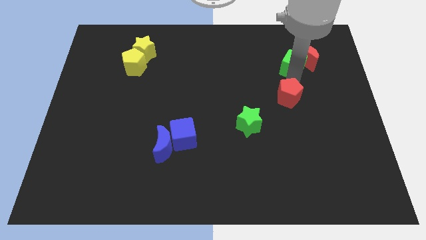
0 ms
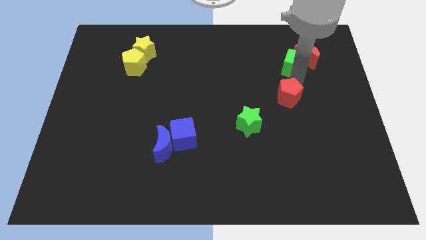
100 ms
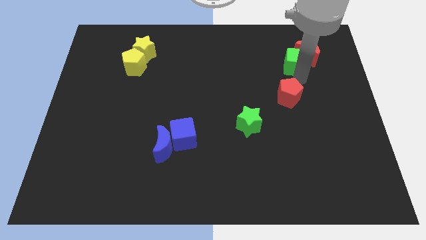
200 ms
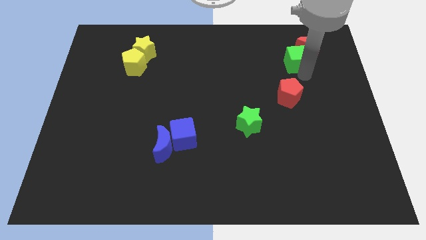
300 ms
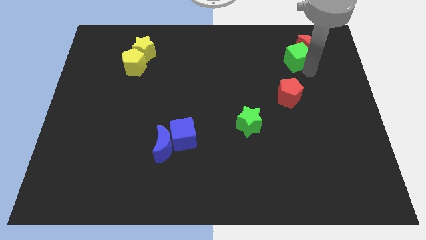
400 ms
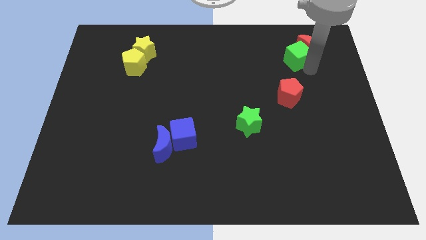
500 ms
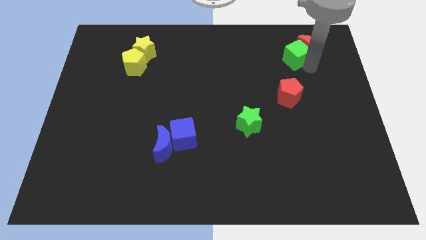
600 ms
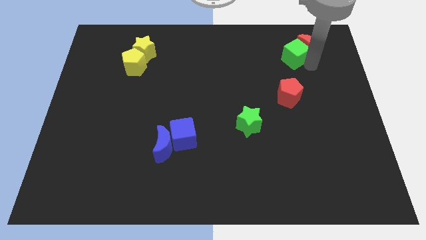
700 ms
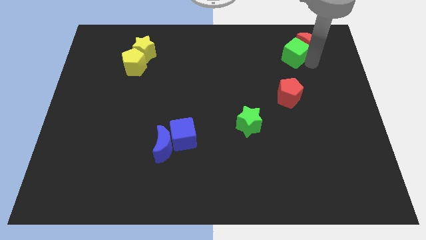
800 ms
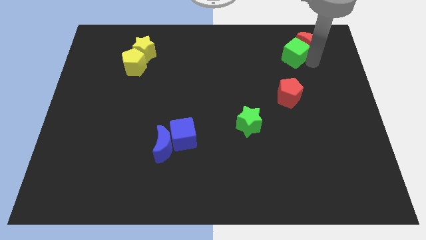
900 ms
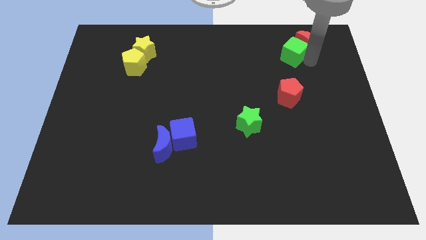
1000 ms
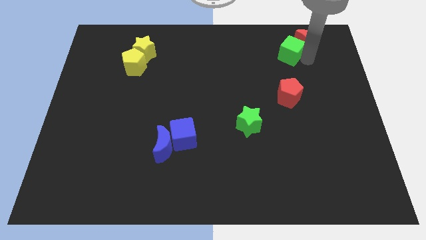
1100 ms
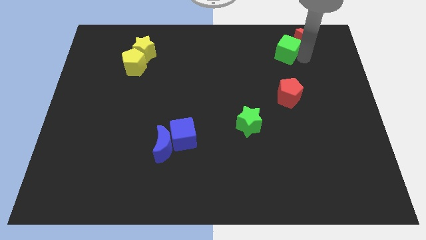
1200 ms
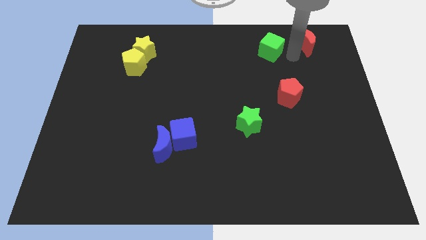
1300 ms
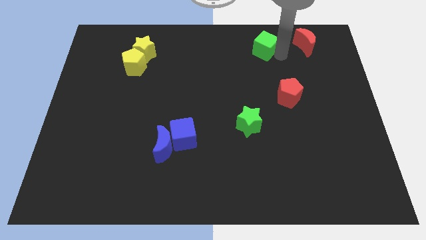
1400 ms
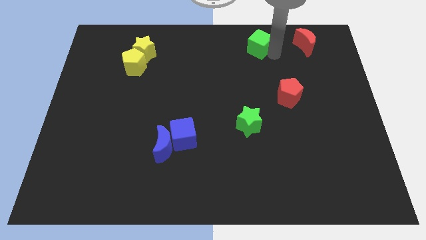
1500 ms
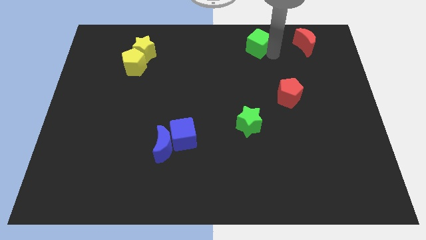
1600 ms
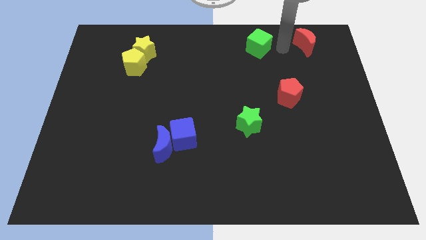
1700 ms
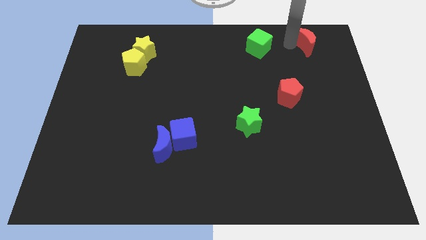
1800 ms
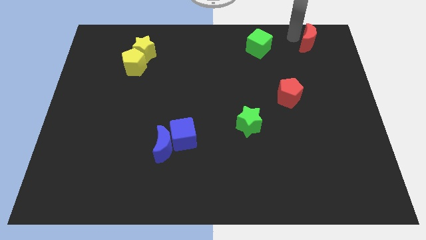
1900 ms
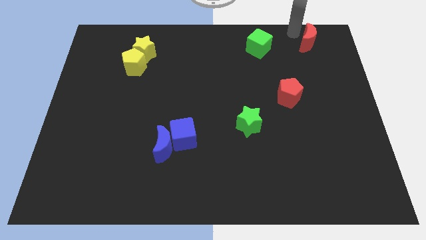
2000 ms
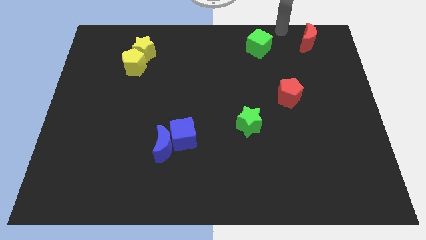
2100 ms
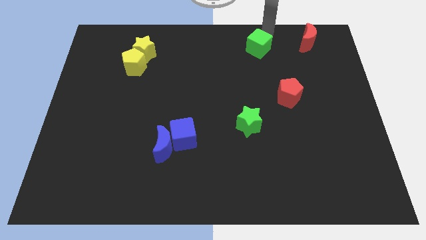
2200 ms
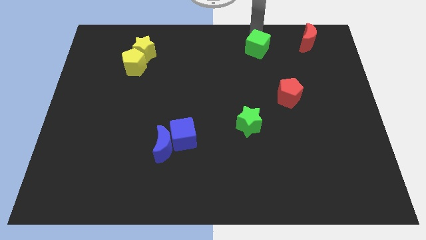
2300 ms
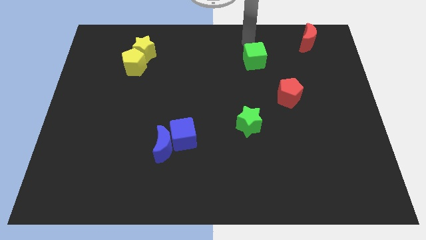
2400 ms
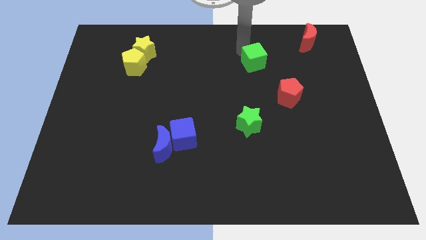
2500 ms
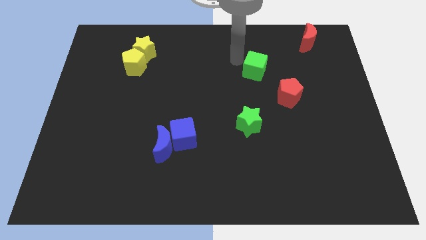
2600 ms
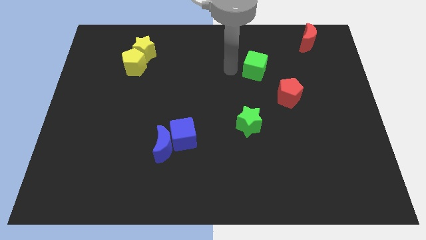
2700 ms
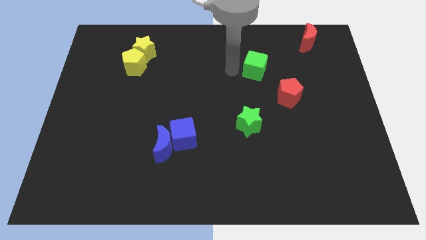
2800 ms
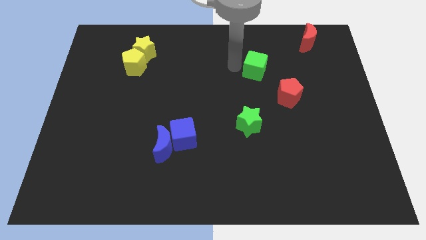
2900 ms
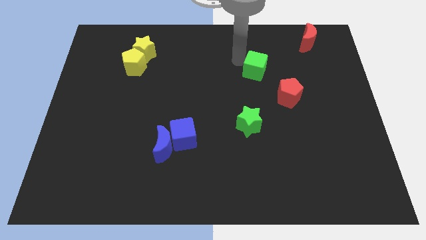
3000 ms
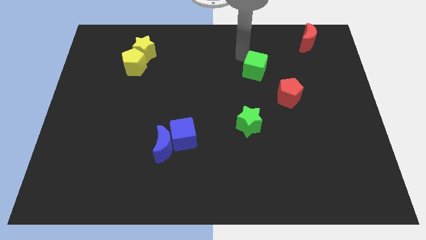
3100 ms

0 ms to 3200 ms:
separate the green cube from red moon

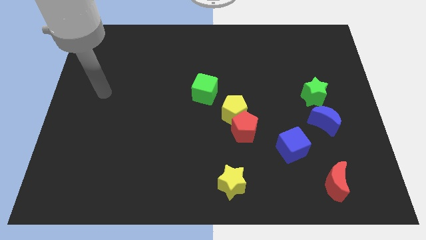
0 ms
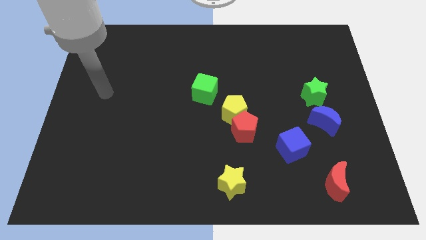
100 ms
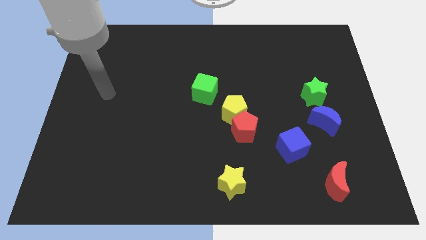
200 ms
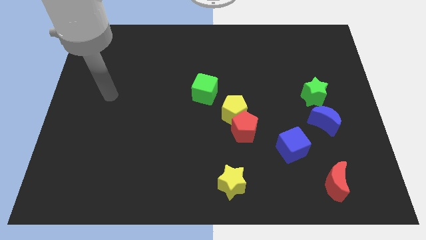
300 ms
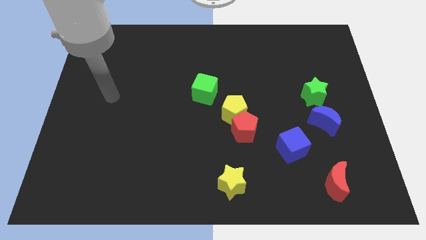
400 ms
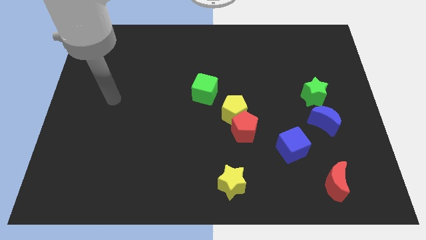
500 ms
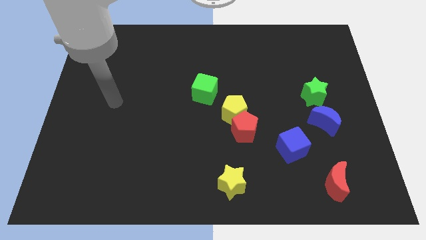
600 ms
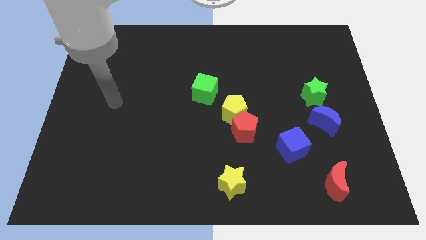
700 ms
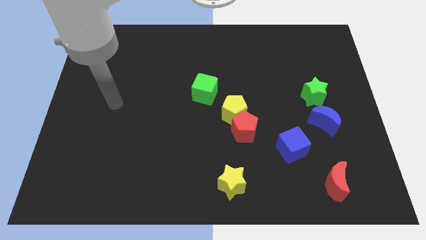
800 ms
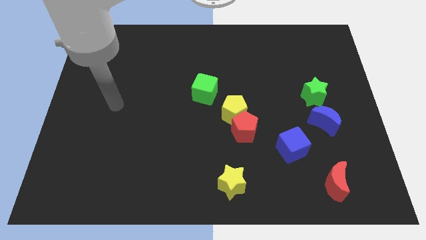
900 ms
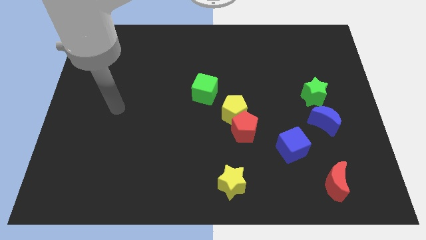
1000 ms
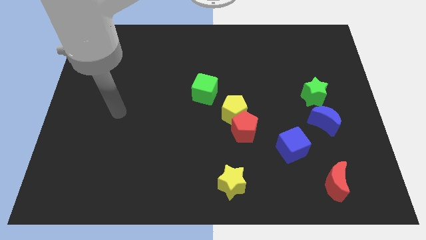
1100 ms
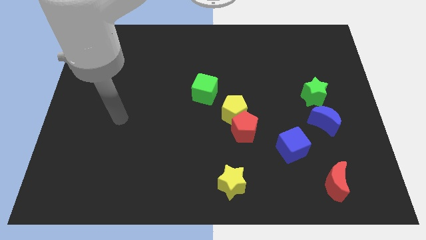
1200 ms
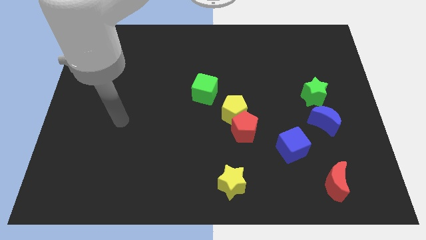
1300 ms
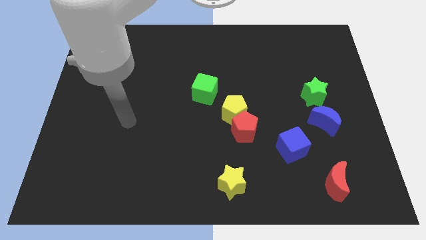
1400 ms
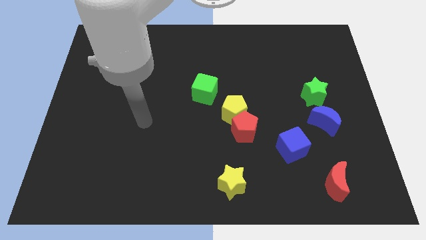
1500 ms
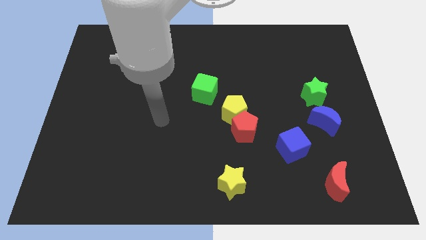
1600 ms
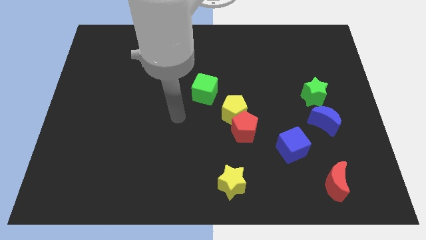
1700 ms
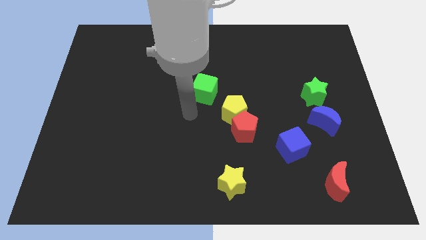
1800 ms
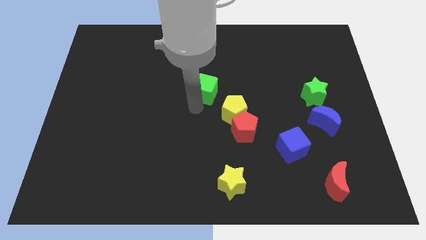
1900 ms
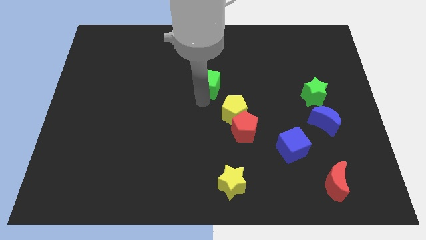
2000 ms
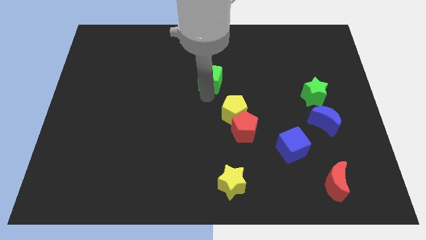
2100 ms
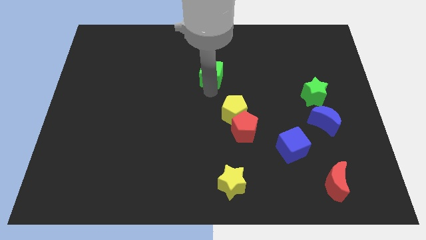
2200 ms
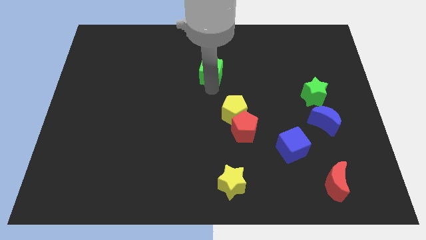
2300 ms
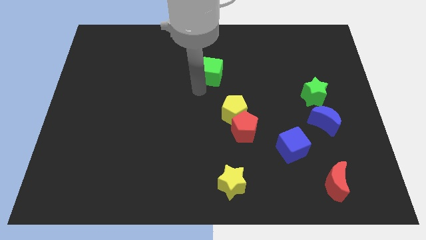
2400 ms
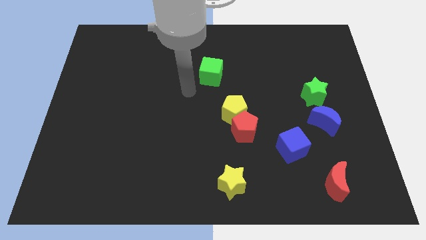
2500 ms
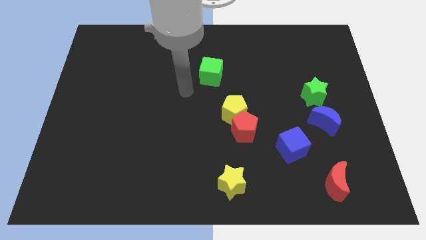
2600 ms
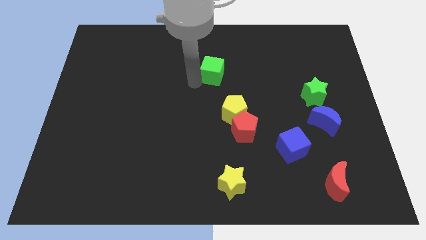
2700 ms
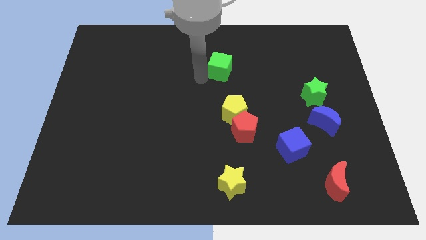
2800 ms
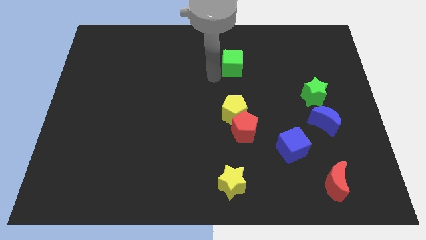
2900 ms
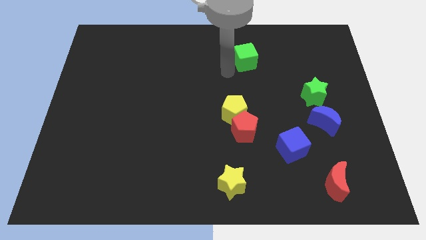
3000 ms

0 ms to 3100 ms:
move the green cube away from the yellow pentagon

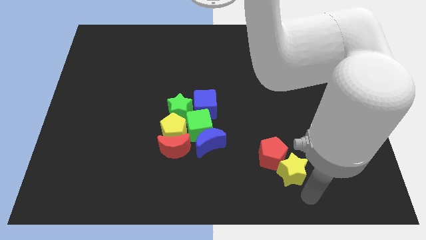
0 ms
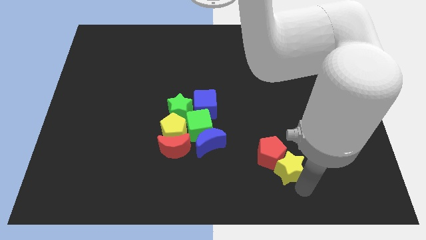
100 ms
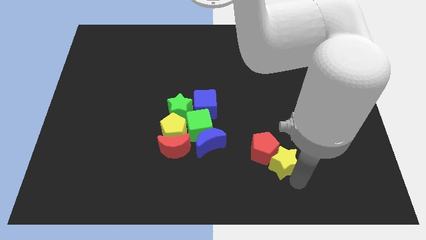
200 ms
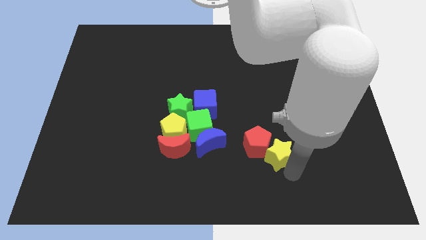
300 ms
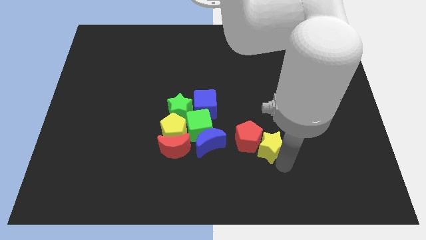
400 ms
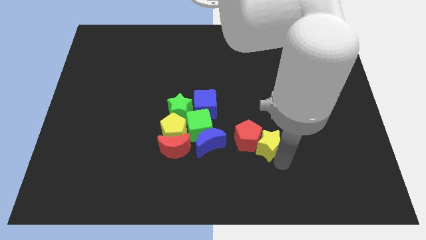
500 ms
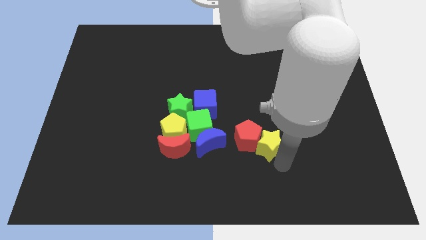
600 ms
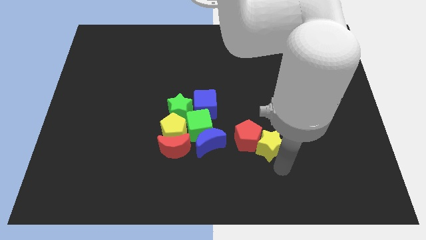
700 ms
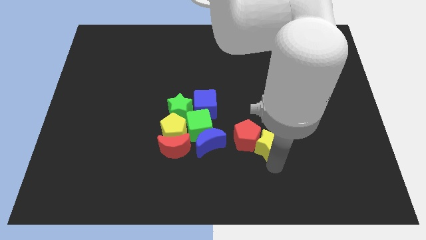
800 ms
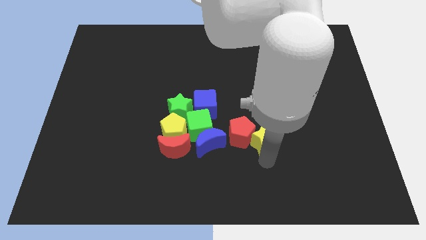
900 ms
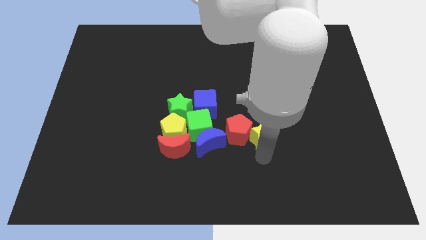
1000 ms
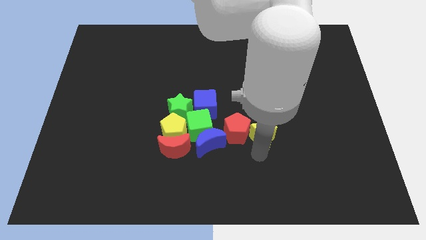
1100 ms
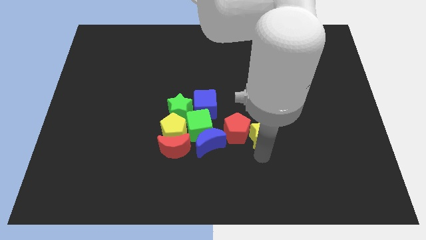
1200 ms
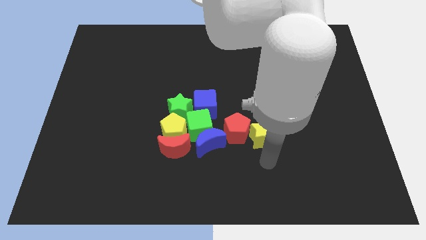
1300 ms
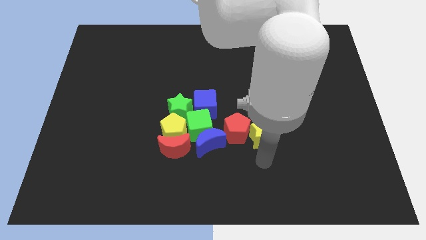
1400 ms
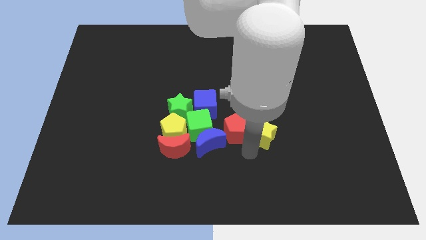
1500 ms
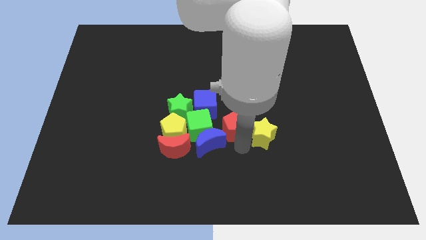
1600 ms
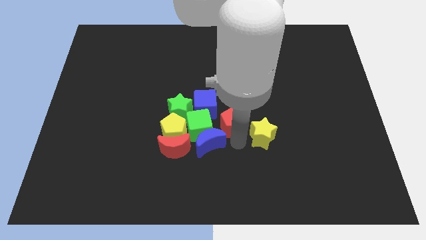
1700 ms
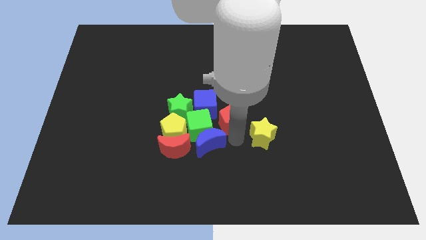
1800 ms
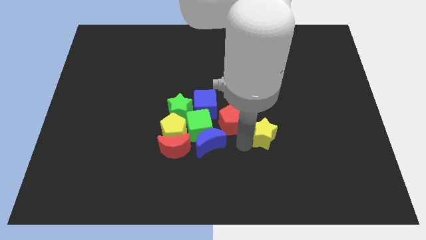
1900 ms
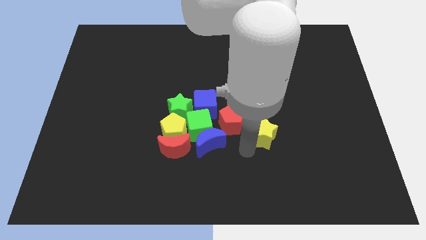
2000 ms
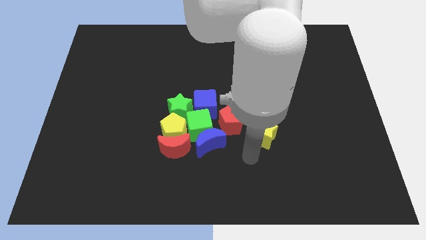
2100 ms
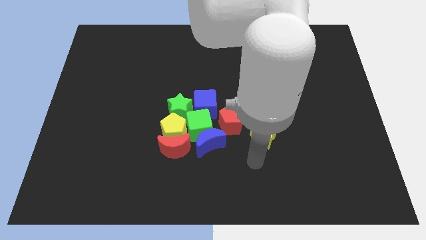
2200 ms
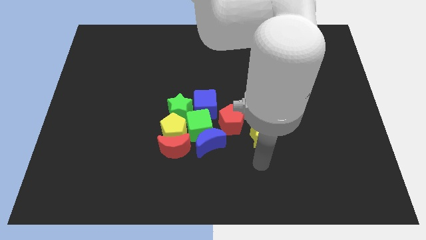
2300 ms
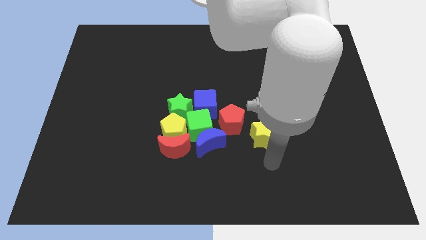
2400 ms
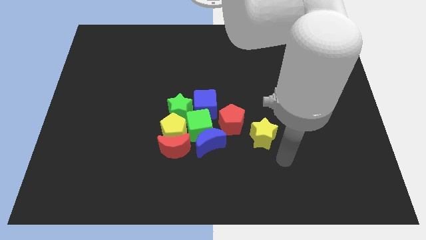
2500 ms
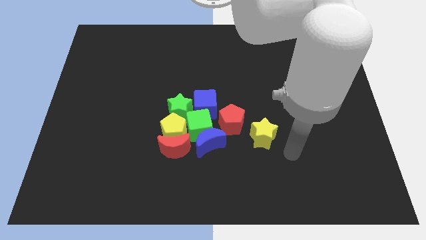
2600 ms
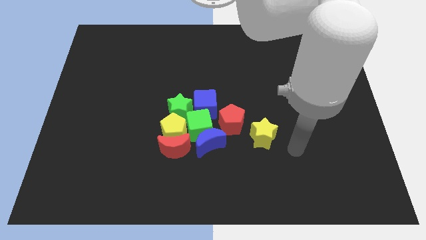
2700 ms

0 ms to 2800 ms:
push red pentagon into the group of objects
